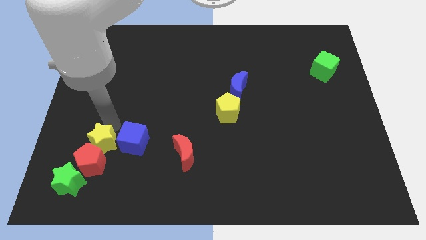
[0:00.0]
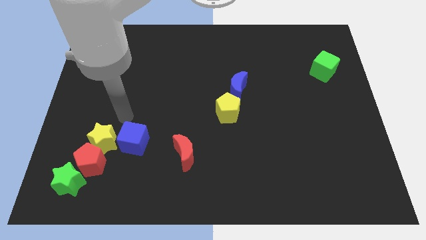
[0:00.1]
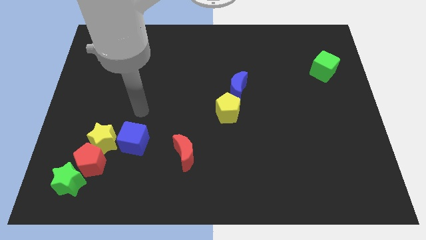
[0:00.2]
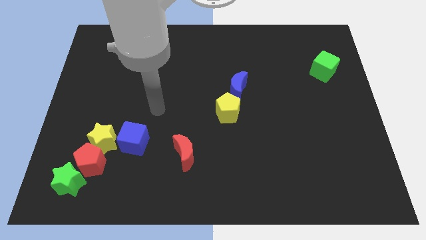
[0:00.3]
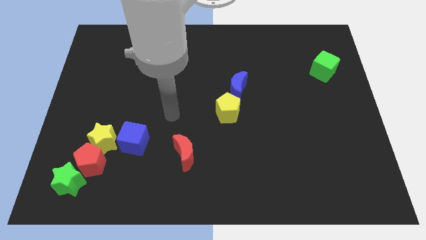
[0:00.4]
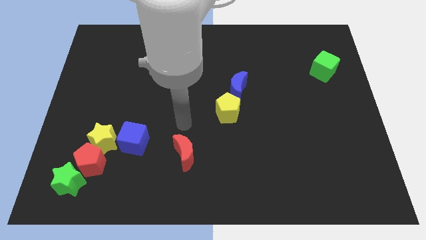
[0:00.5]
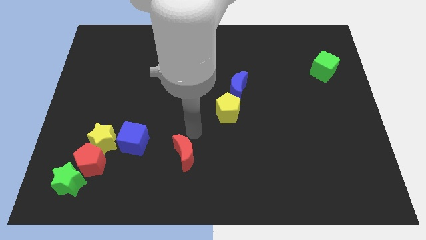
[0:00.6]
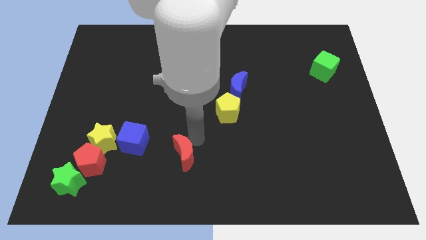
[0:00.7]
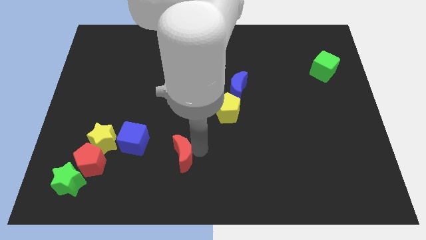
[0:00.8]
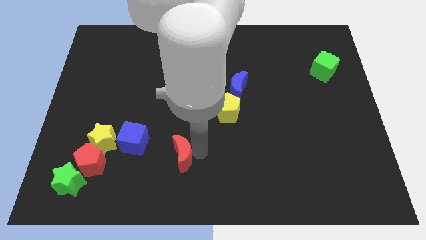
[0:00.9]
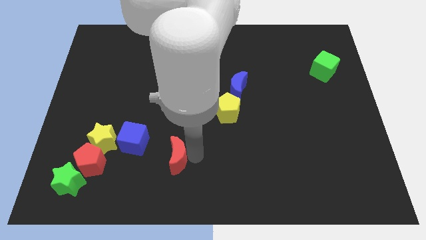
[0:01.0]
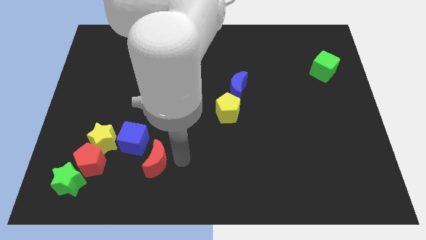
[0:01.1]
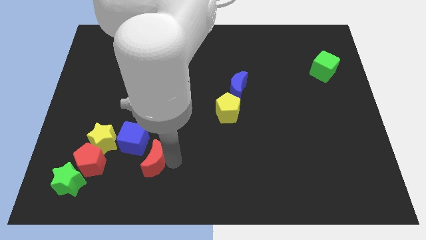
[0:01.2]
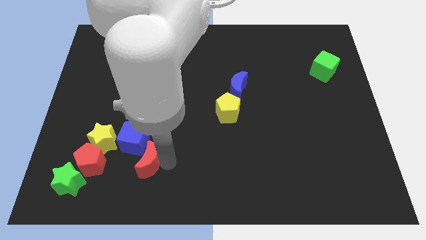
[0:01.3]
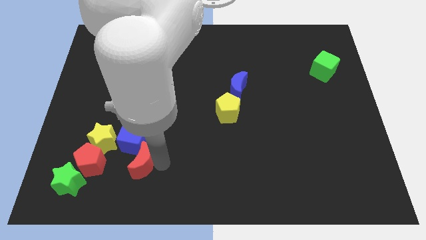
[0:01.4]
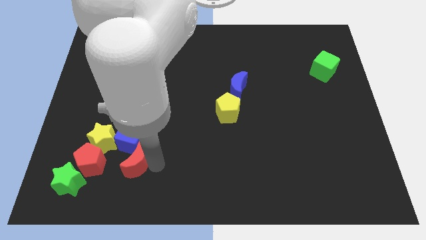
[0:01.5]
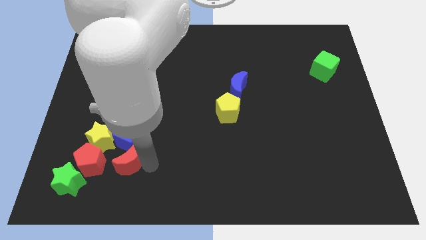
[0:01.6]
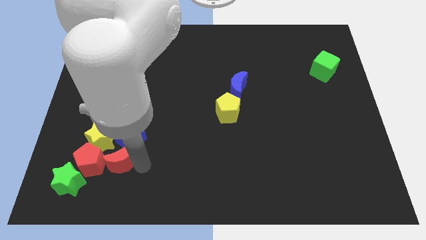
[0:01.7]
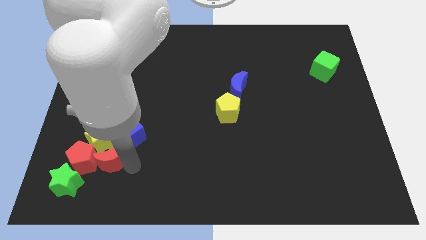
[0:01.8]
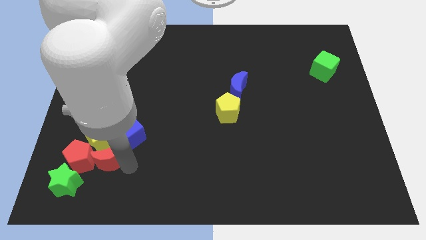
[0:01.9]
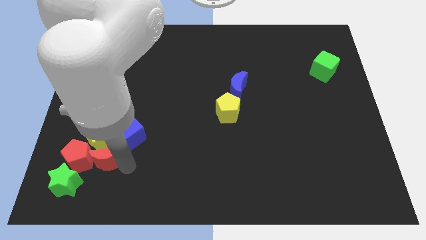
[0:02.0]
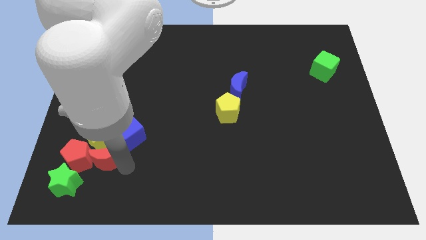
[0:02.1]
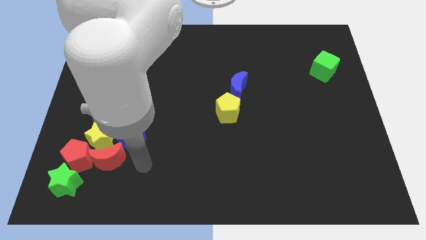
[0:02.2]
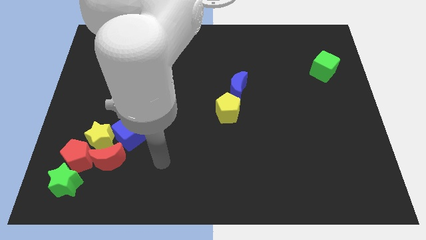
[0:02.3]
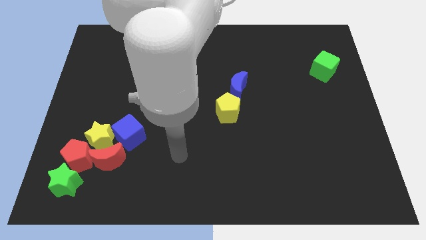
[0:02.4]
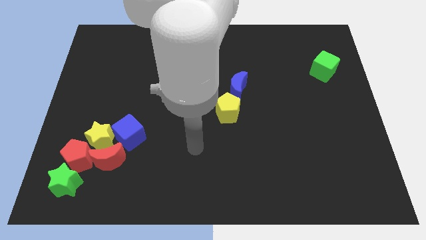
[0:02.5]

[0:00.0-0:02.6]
move the red moon close to the yellow star

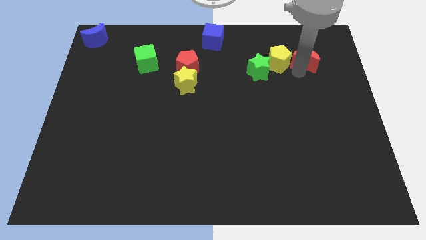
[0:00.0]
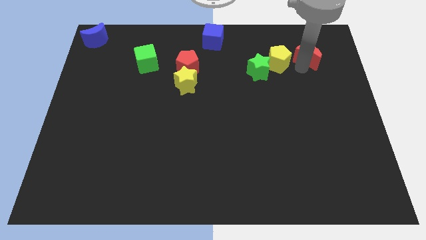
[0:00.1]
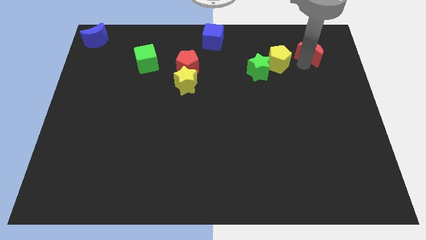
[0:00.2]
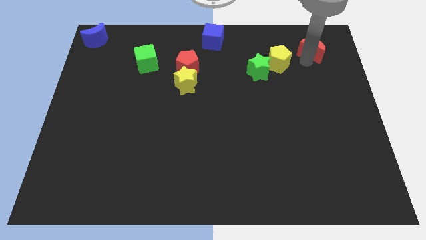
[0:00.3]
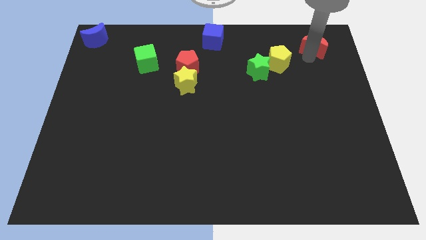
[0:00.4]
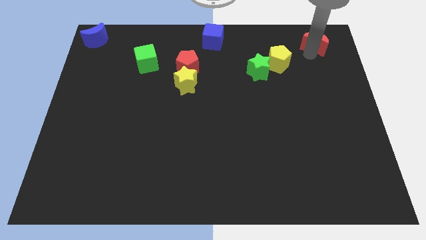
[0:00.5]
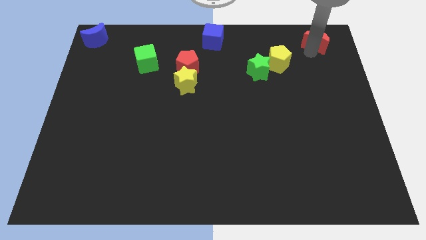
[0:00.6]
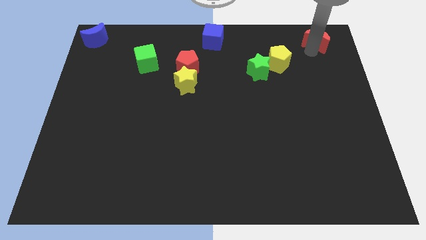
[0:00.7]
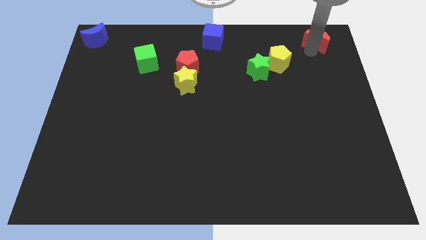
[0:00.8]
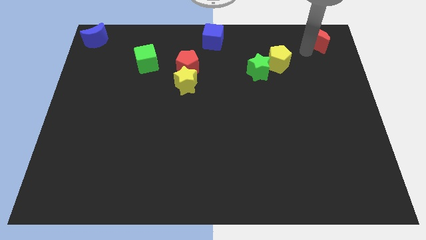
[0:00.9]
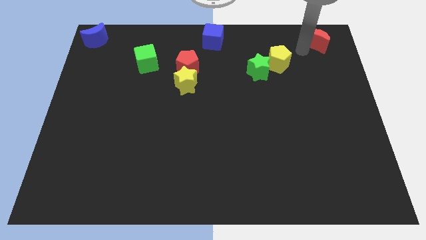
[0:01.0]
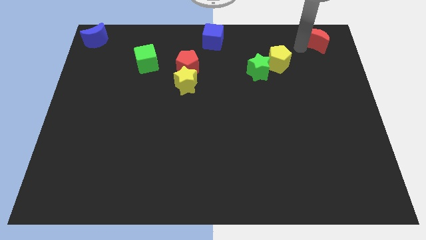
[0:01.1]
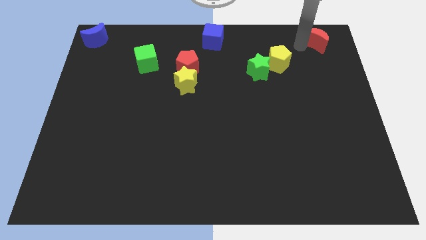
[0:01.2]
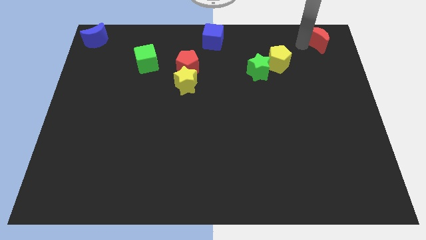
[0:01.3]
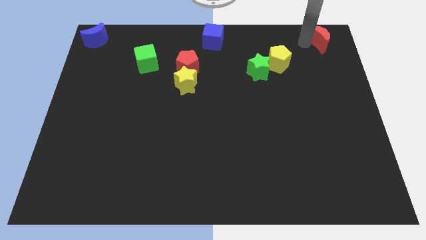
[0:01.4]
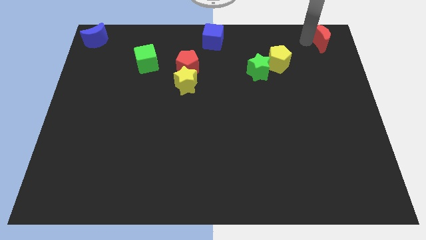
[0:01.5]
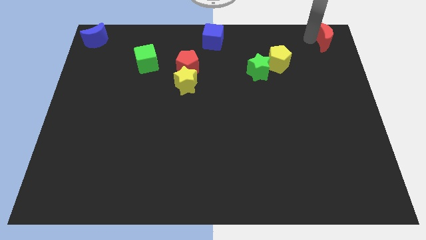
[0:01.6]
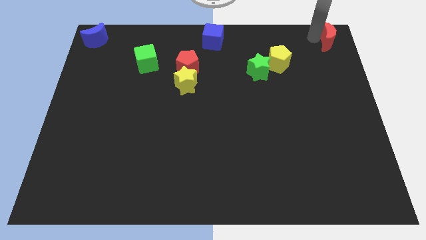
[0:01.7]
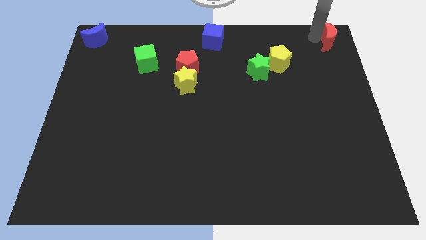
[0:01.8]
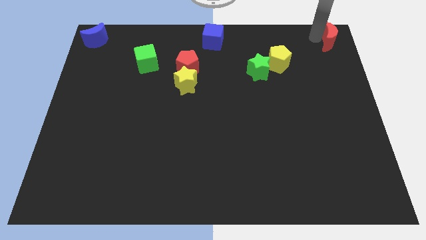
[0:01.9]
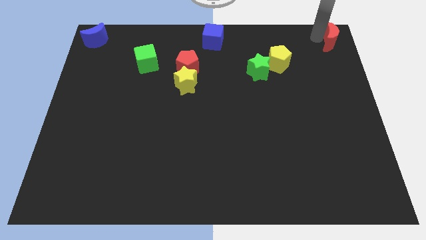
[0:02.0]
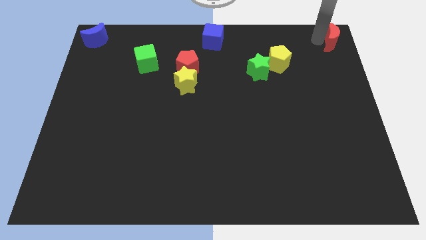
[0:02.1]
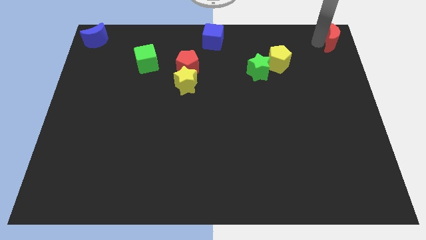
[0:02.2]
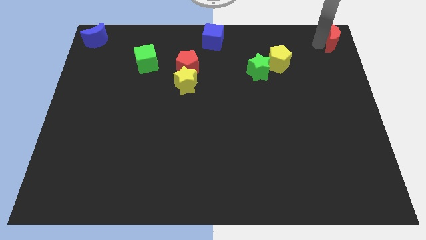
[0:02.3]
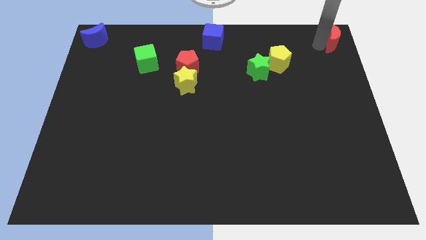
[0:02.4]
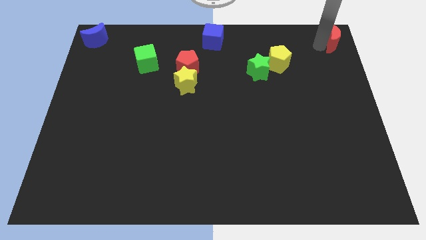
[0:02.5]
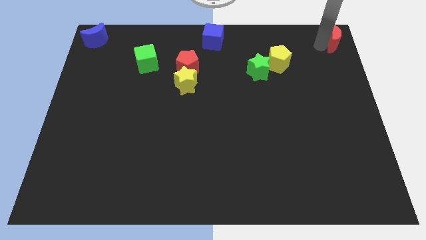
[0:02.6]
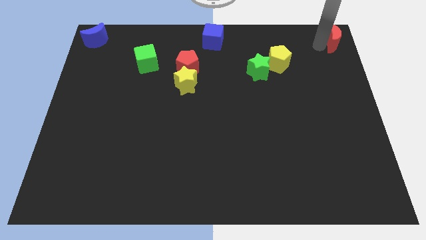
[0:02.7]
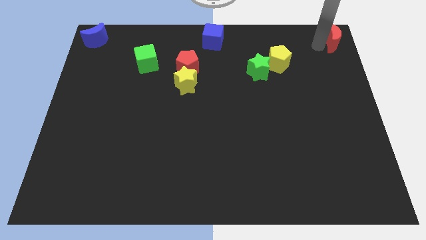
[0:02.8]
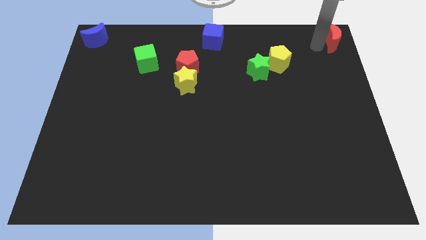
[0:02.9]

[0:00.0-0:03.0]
place the red moon horizontally at the right side of the blue cube

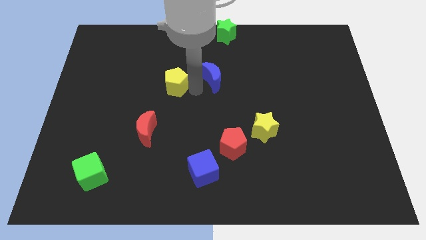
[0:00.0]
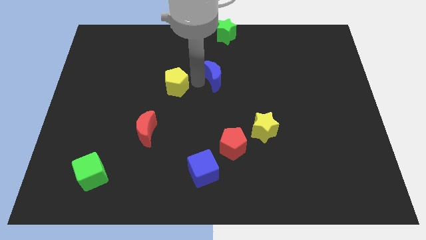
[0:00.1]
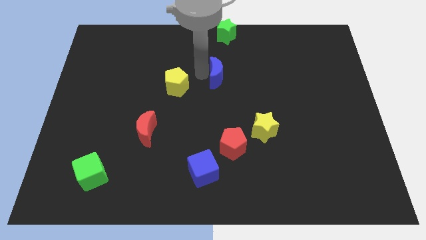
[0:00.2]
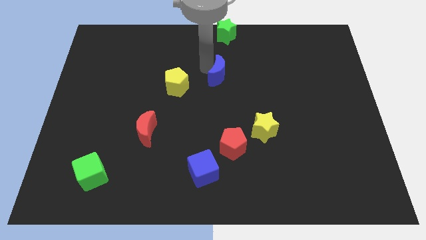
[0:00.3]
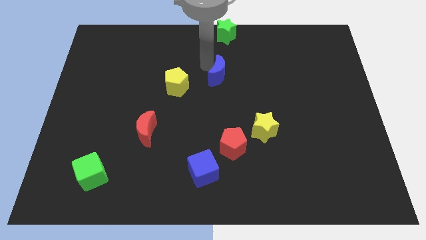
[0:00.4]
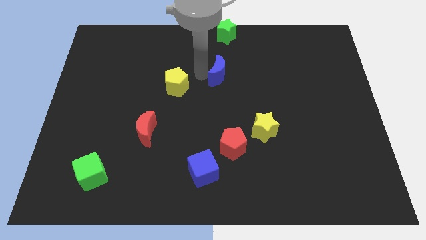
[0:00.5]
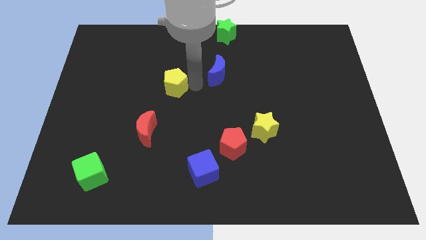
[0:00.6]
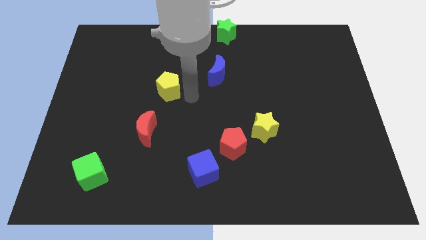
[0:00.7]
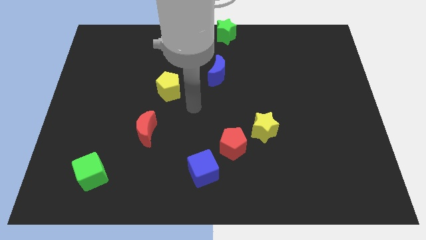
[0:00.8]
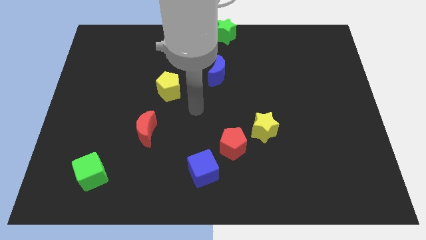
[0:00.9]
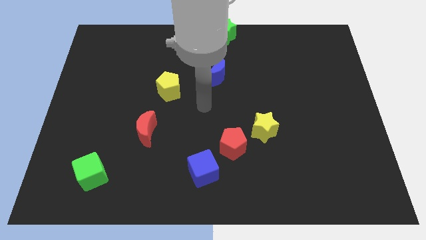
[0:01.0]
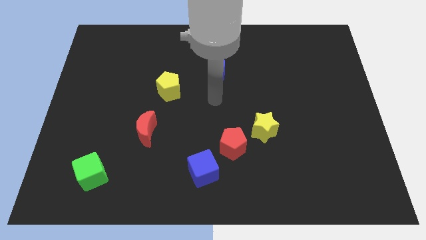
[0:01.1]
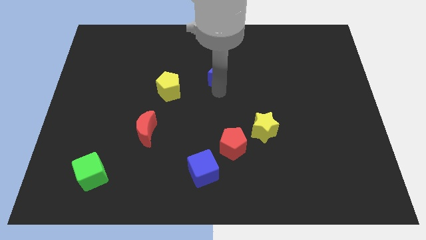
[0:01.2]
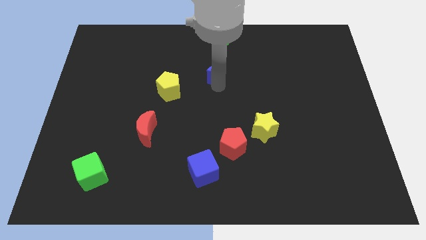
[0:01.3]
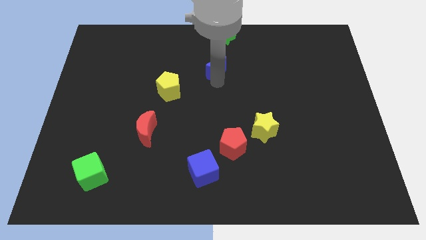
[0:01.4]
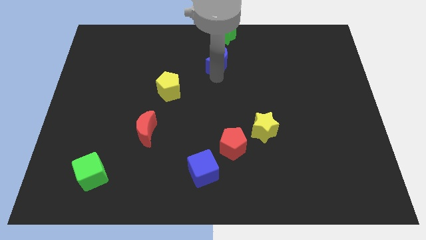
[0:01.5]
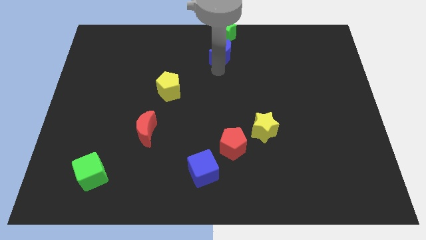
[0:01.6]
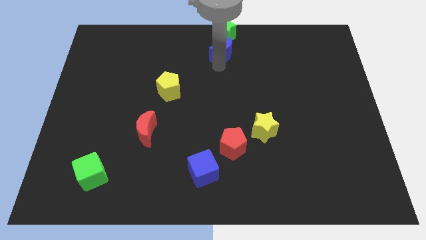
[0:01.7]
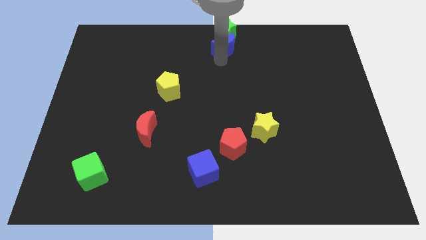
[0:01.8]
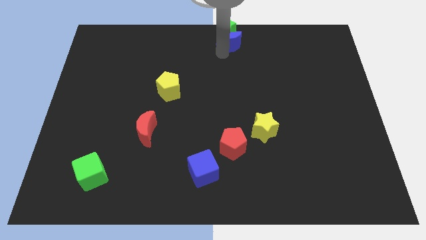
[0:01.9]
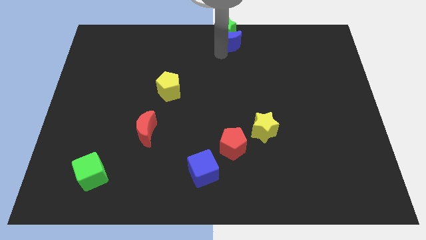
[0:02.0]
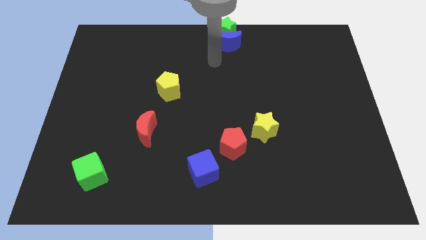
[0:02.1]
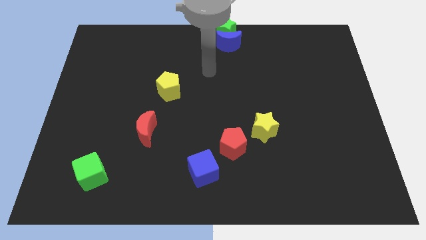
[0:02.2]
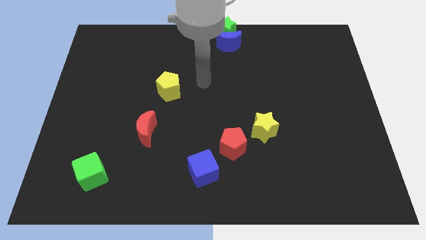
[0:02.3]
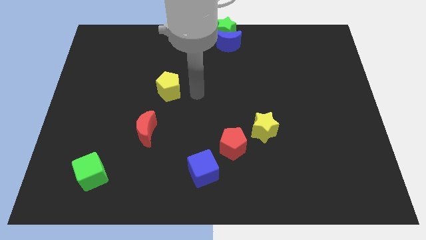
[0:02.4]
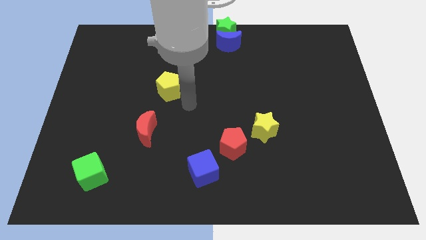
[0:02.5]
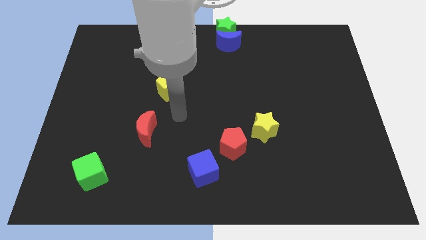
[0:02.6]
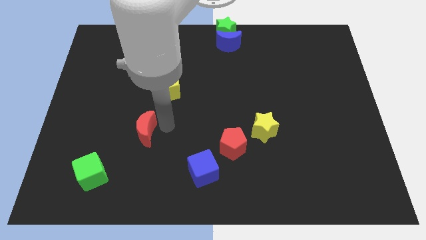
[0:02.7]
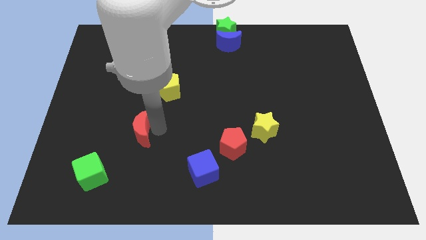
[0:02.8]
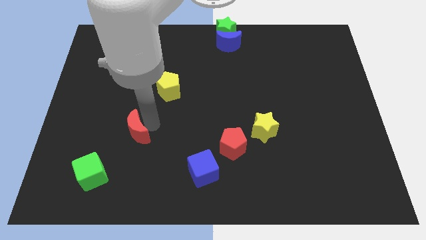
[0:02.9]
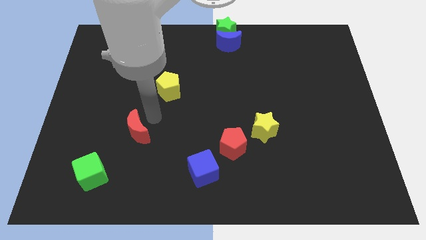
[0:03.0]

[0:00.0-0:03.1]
push the blue moon close to the green star

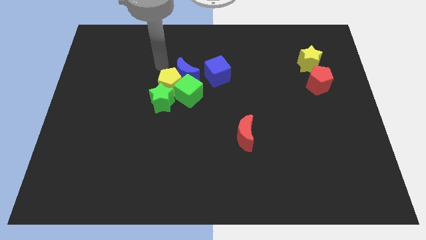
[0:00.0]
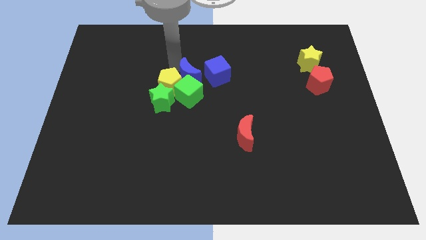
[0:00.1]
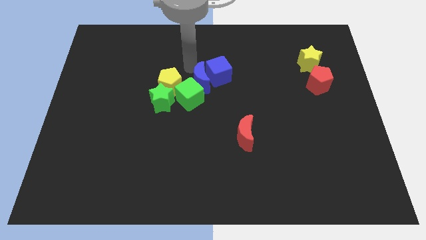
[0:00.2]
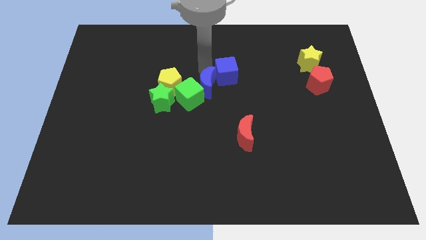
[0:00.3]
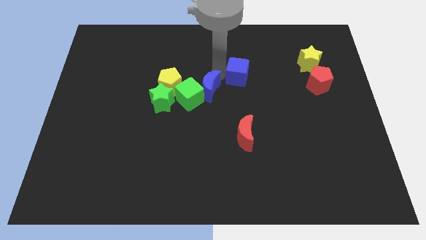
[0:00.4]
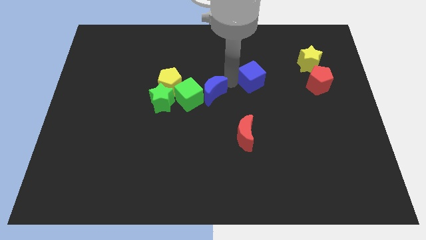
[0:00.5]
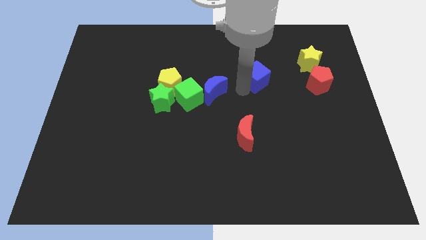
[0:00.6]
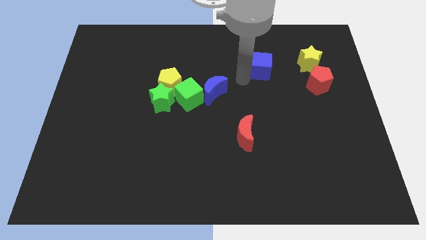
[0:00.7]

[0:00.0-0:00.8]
separate blue blocks
